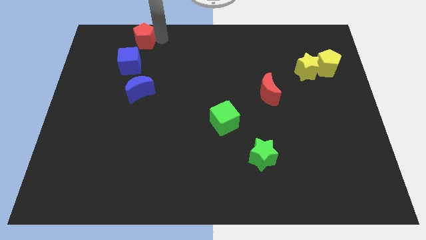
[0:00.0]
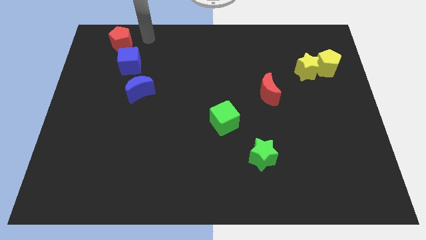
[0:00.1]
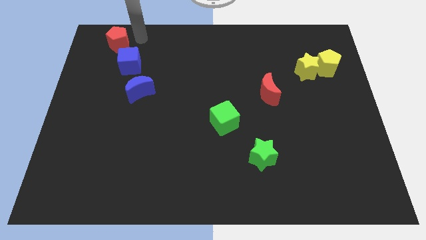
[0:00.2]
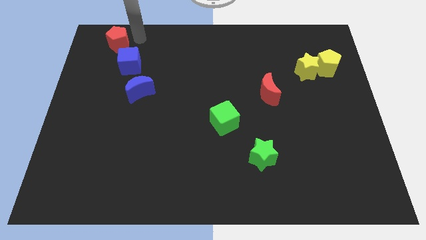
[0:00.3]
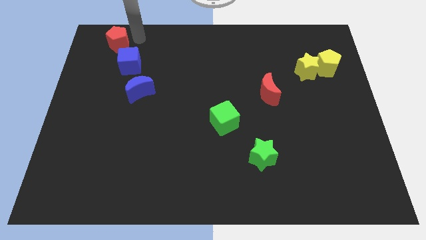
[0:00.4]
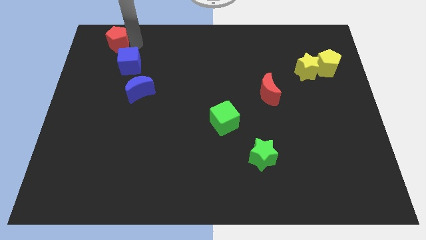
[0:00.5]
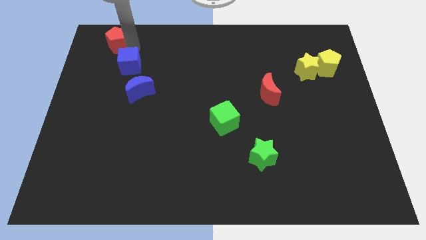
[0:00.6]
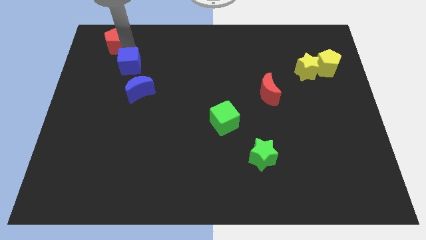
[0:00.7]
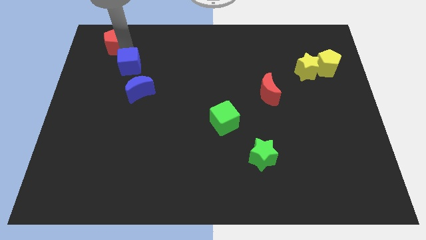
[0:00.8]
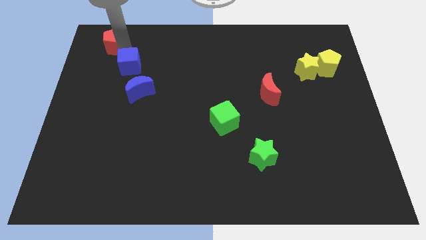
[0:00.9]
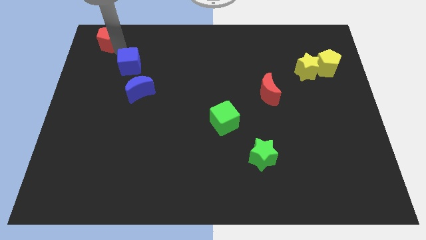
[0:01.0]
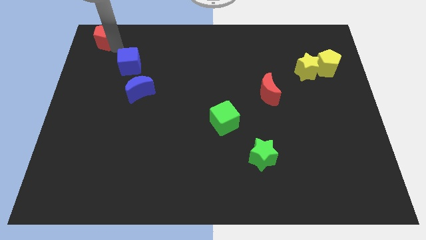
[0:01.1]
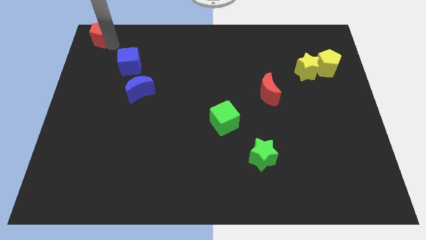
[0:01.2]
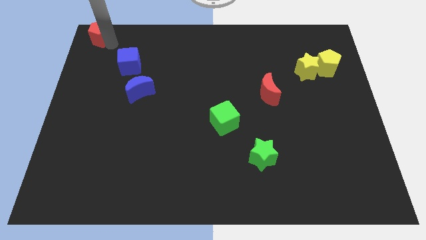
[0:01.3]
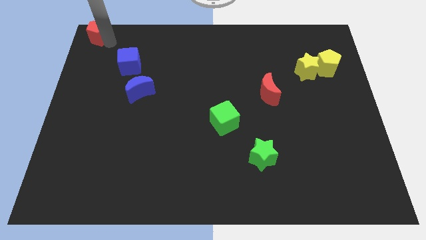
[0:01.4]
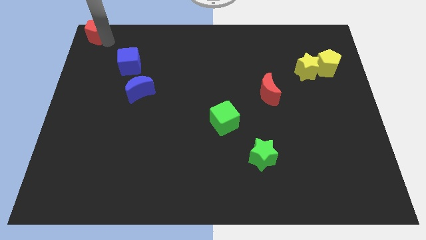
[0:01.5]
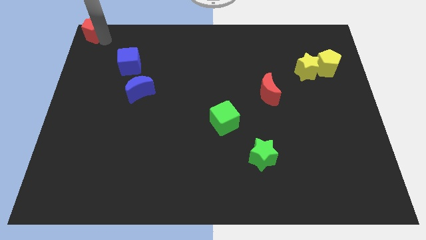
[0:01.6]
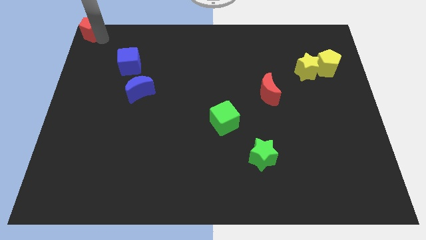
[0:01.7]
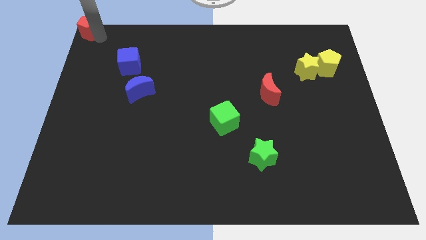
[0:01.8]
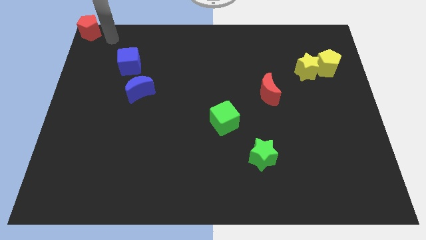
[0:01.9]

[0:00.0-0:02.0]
place the red pentagon at top left corner of the board

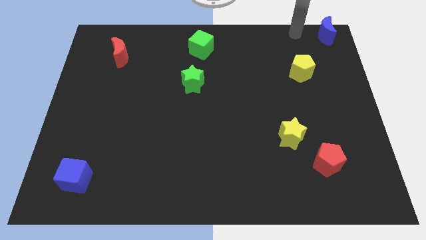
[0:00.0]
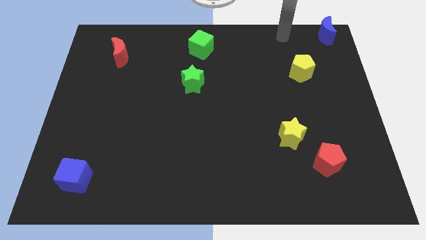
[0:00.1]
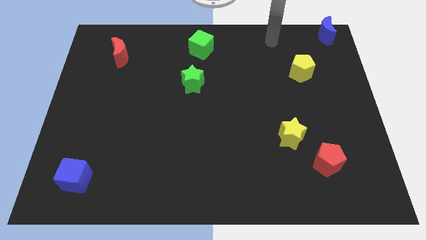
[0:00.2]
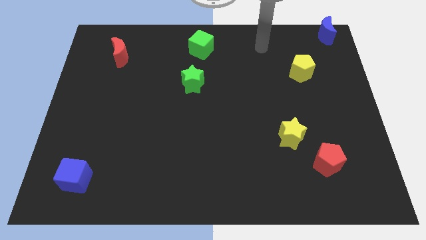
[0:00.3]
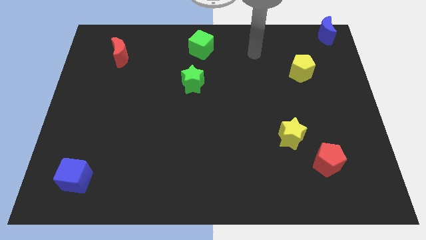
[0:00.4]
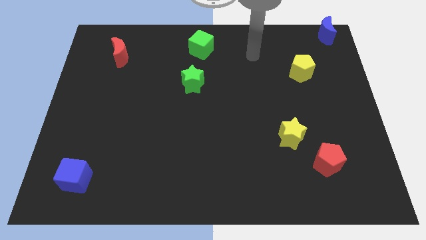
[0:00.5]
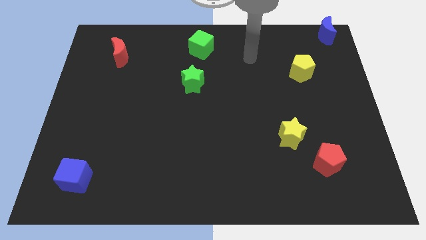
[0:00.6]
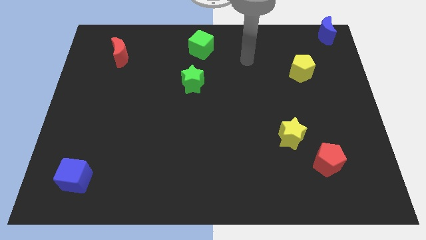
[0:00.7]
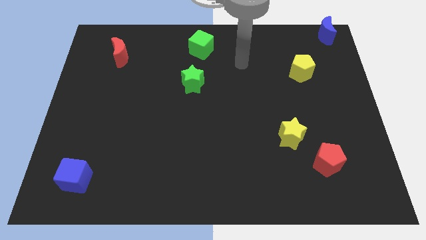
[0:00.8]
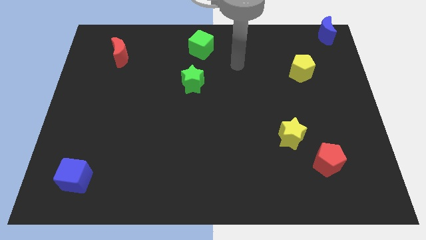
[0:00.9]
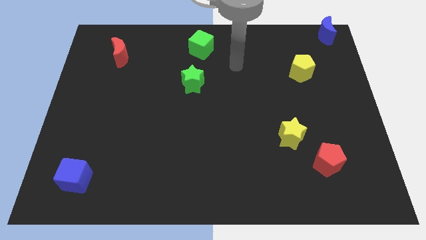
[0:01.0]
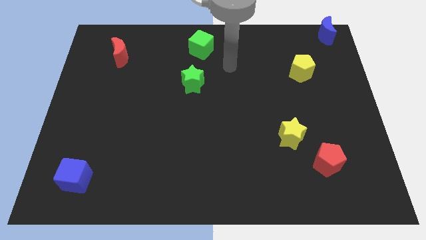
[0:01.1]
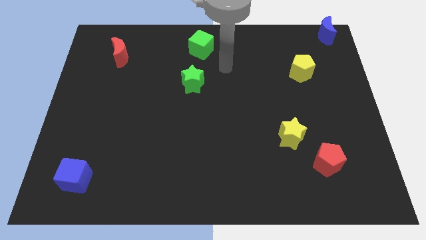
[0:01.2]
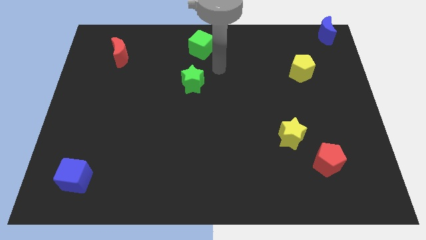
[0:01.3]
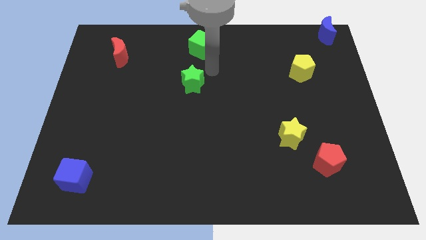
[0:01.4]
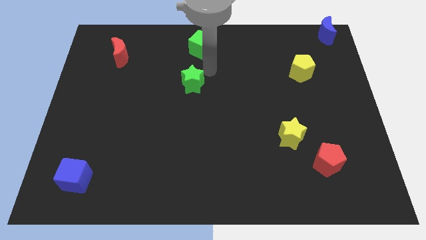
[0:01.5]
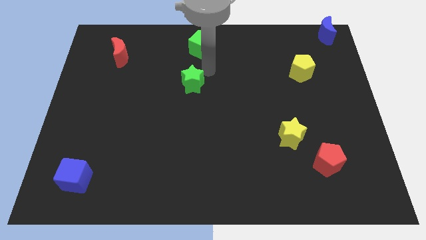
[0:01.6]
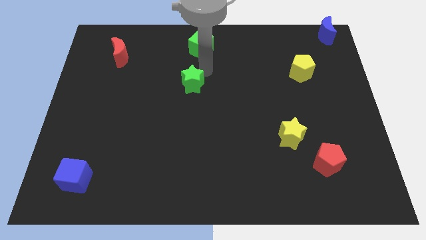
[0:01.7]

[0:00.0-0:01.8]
place the arm right to the green star

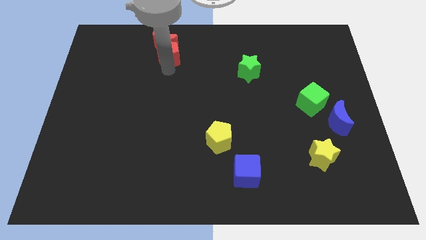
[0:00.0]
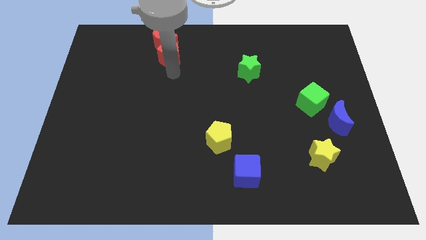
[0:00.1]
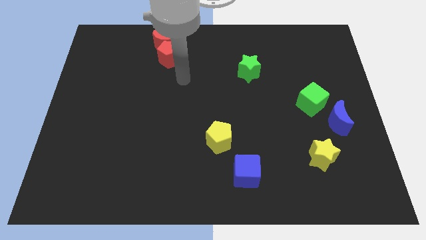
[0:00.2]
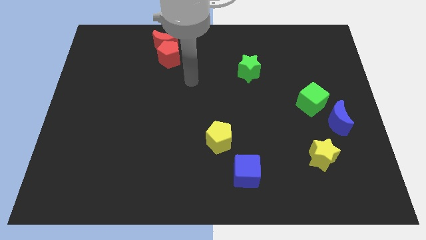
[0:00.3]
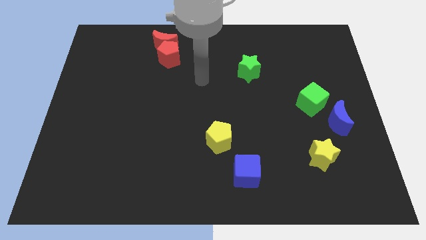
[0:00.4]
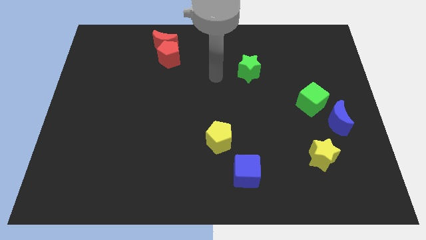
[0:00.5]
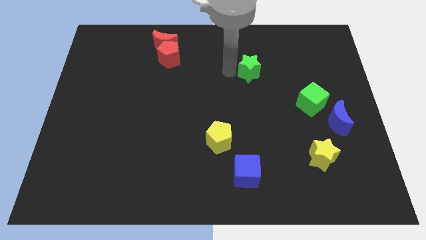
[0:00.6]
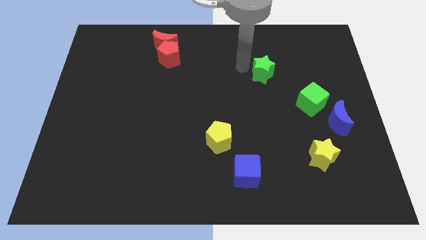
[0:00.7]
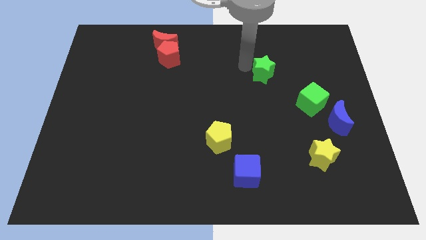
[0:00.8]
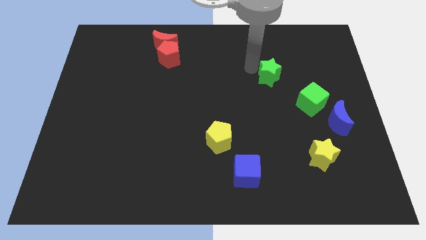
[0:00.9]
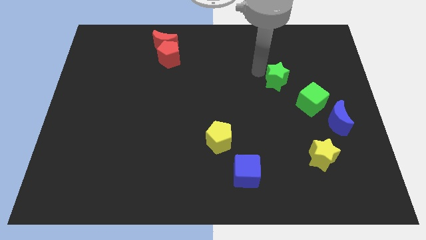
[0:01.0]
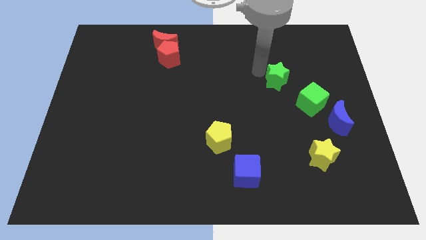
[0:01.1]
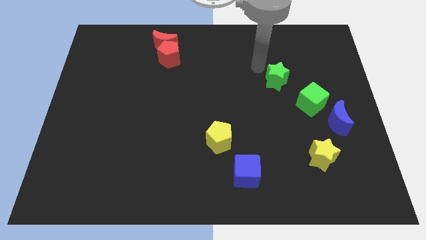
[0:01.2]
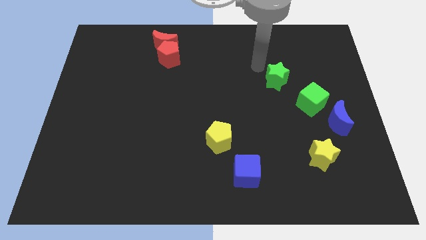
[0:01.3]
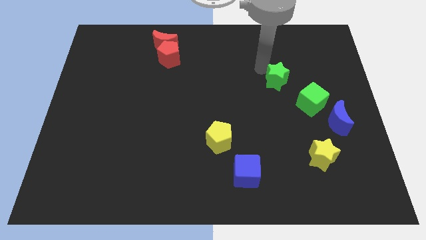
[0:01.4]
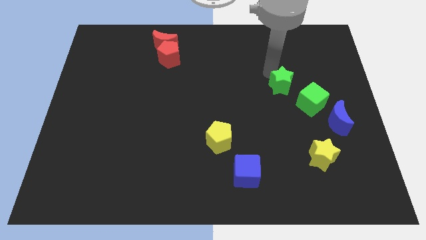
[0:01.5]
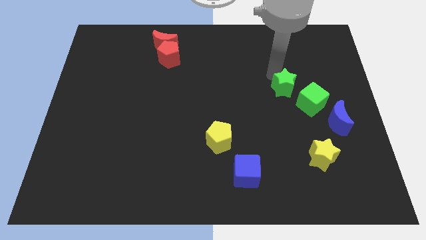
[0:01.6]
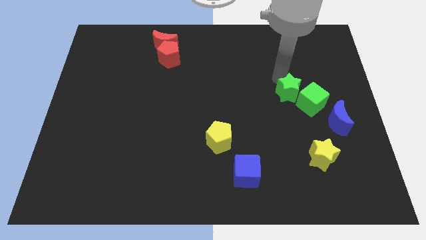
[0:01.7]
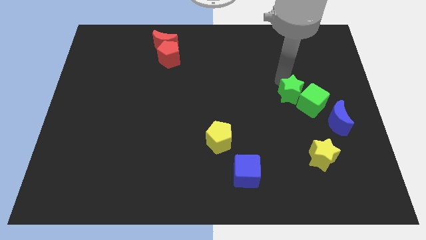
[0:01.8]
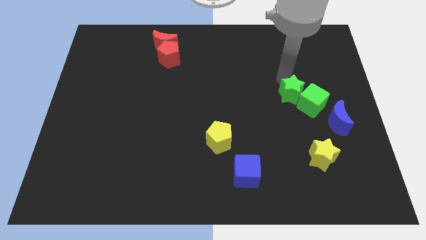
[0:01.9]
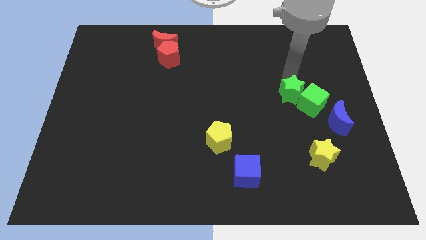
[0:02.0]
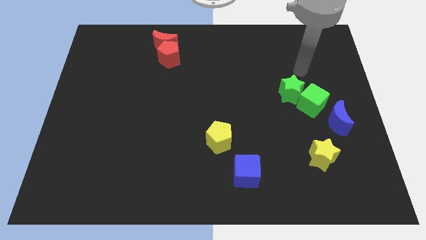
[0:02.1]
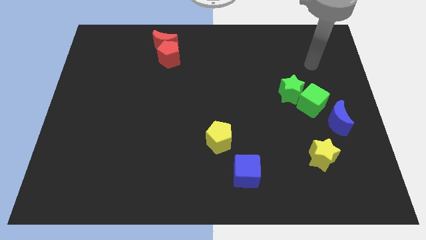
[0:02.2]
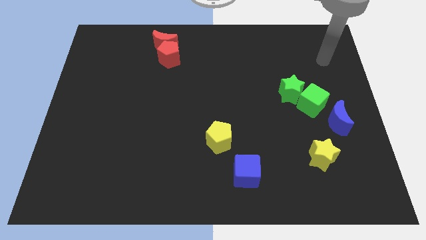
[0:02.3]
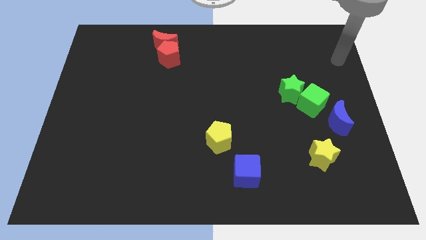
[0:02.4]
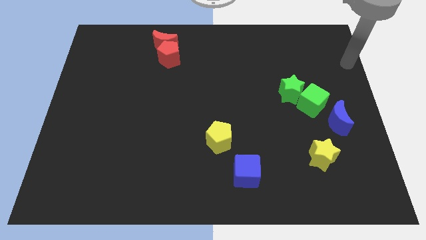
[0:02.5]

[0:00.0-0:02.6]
move the green star left to the green cube

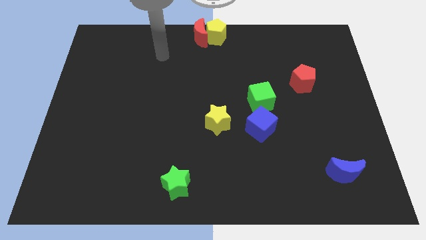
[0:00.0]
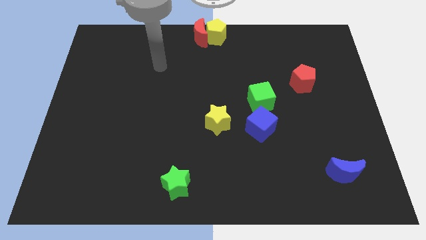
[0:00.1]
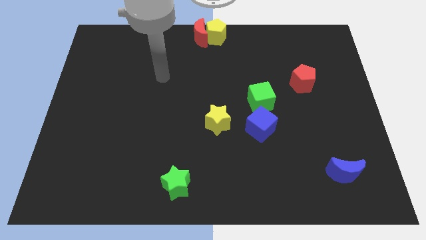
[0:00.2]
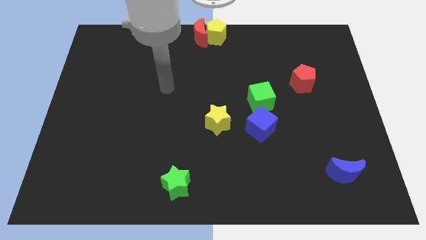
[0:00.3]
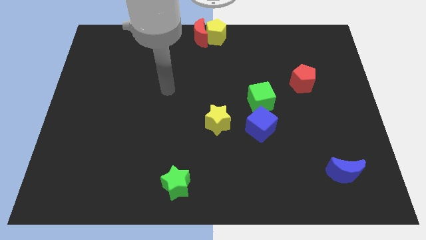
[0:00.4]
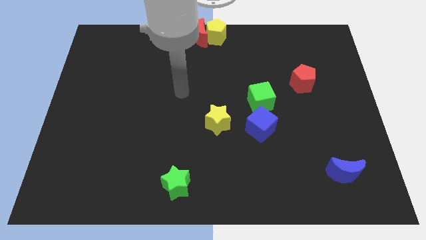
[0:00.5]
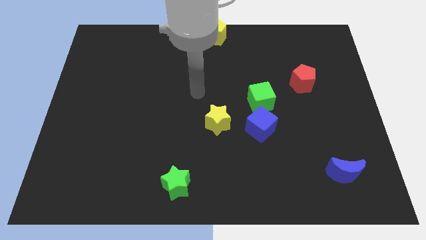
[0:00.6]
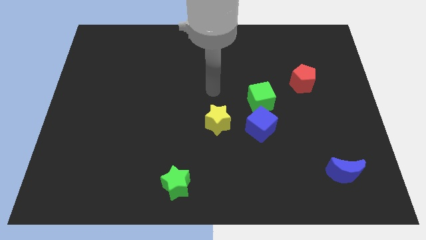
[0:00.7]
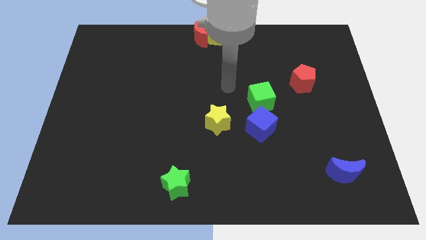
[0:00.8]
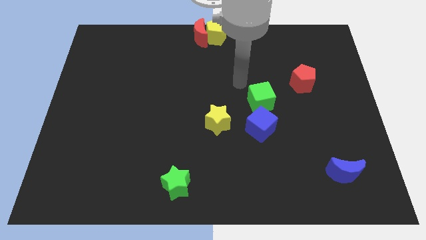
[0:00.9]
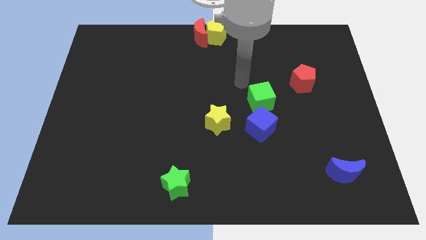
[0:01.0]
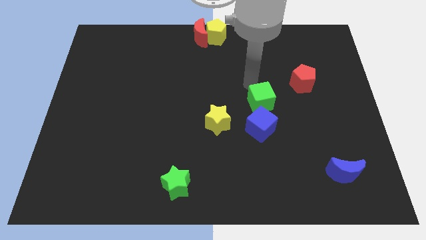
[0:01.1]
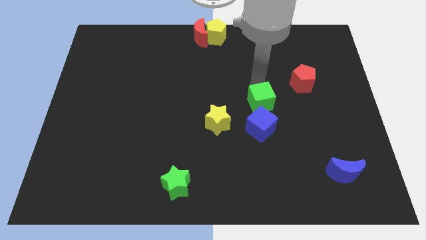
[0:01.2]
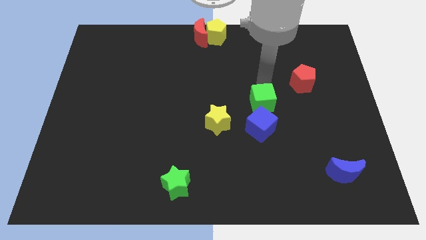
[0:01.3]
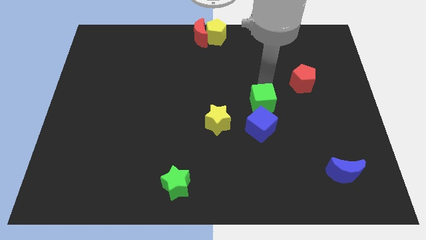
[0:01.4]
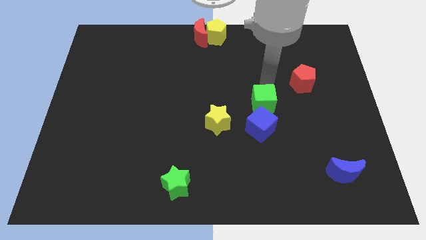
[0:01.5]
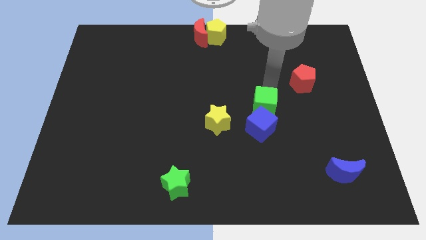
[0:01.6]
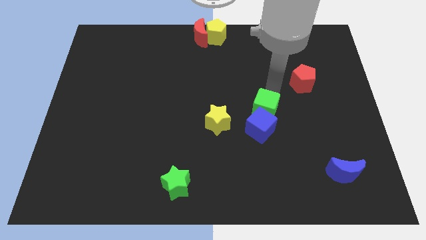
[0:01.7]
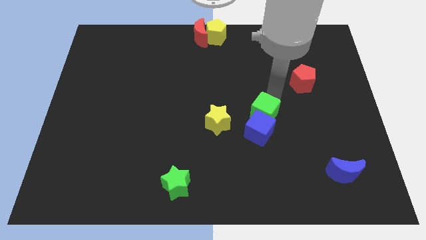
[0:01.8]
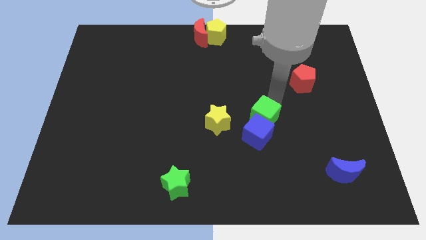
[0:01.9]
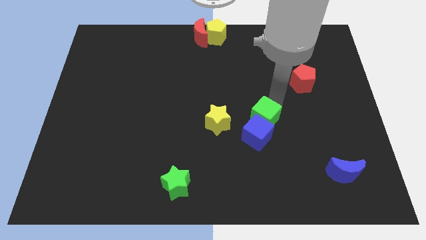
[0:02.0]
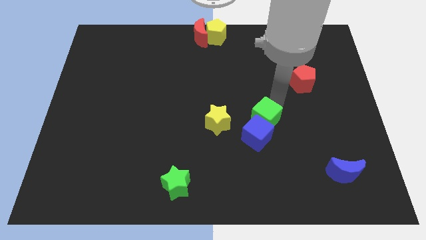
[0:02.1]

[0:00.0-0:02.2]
push the green and blue cubes together slightly to the bottom side of the board

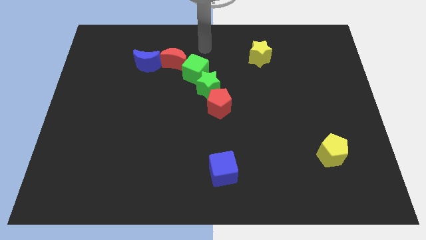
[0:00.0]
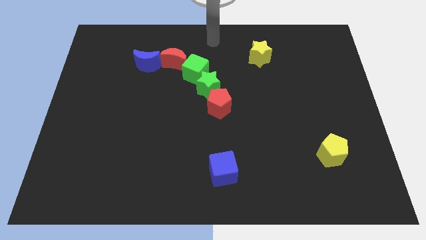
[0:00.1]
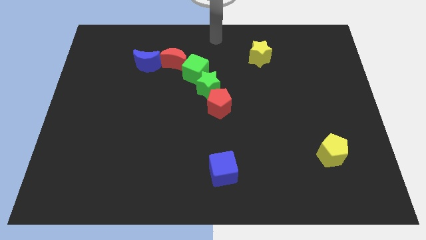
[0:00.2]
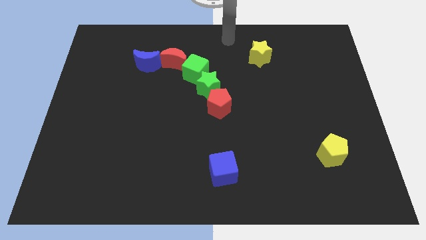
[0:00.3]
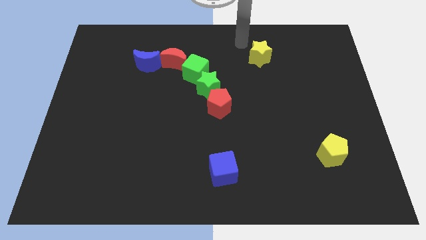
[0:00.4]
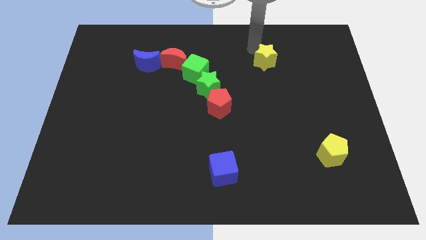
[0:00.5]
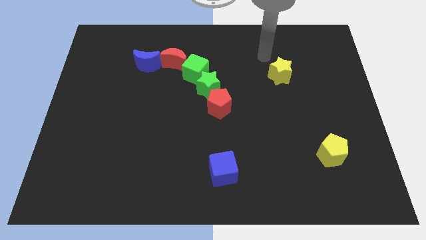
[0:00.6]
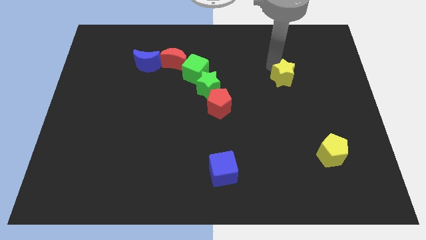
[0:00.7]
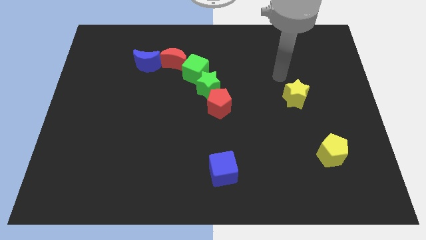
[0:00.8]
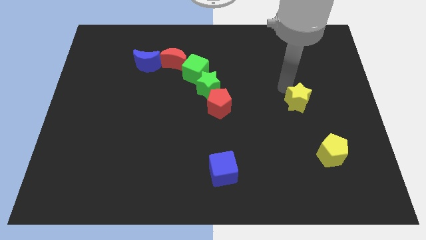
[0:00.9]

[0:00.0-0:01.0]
move the yellow star to the right of the red pentagon
